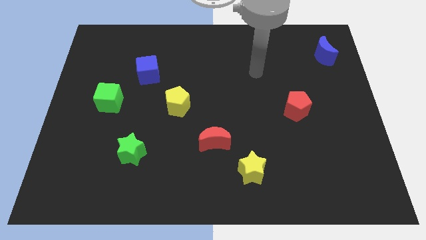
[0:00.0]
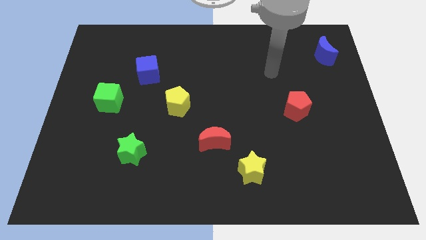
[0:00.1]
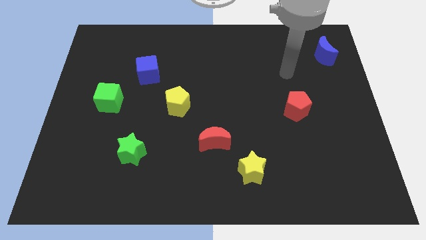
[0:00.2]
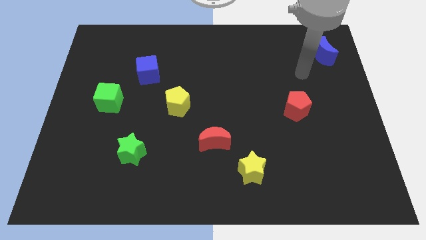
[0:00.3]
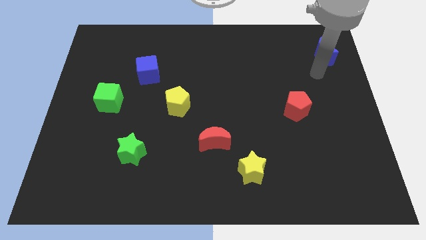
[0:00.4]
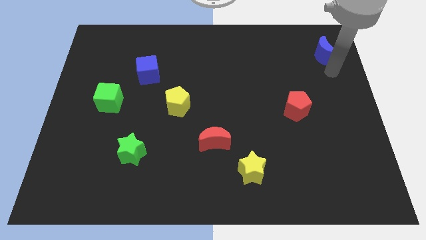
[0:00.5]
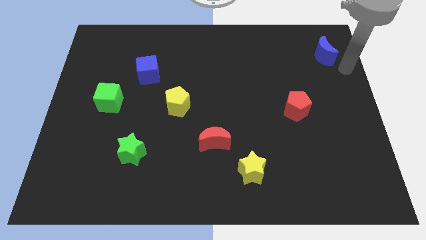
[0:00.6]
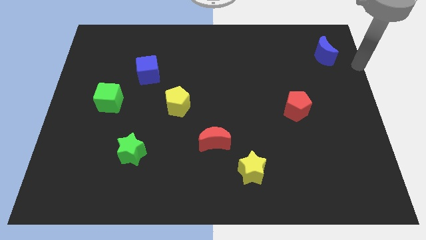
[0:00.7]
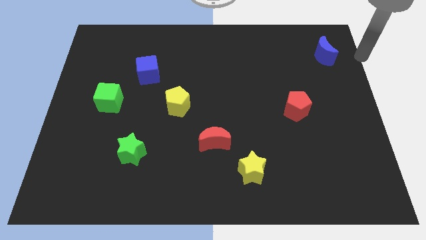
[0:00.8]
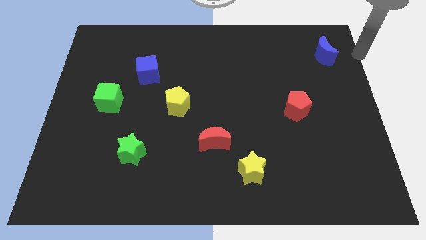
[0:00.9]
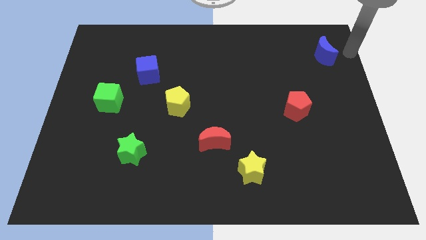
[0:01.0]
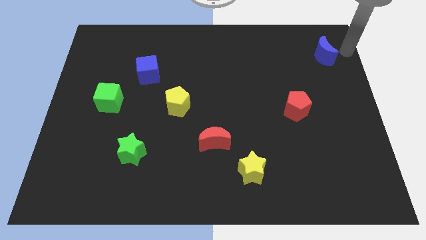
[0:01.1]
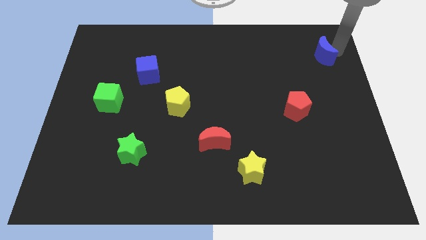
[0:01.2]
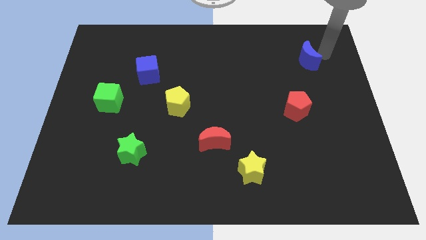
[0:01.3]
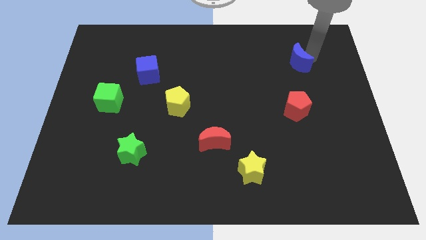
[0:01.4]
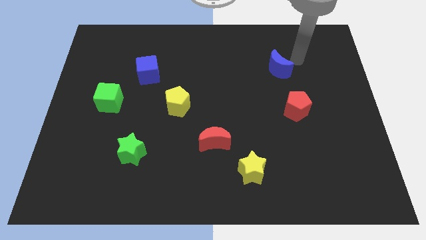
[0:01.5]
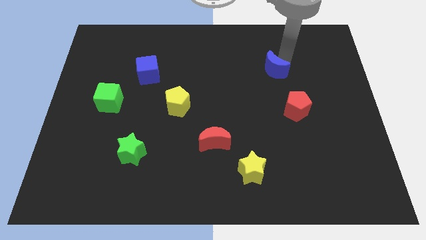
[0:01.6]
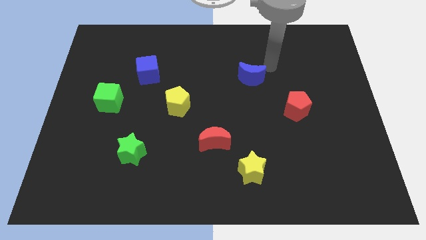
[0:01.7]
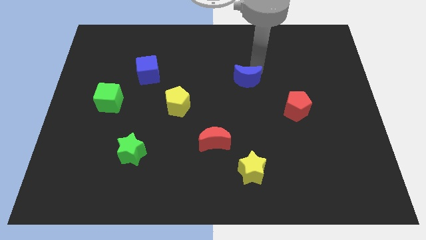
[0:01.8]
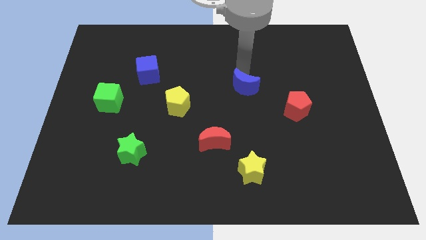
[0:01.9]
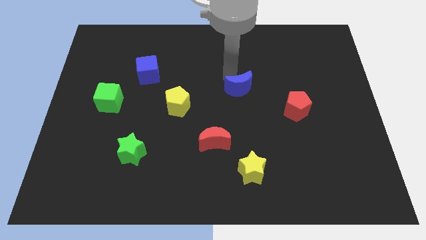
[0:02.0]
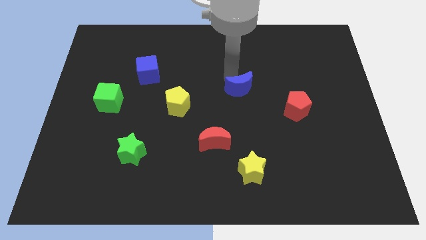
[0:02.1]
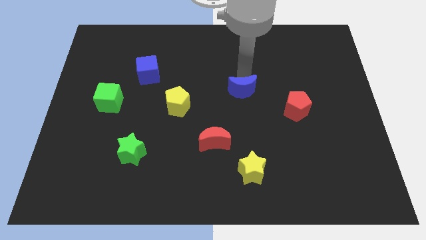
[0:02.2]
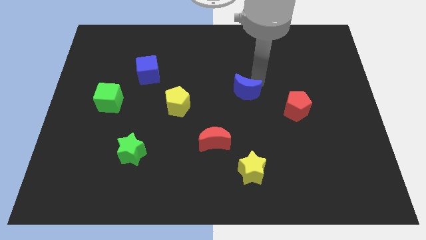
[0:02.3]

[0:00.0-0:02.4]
place the blue moon vertical to yellow star

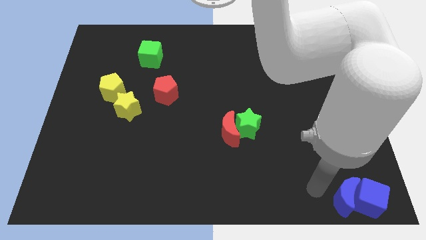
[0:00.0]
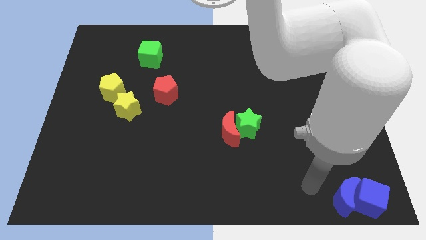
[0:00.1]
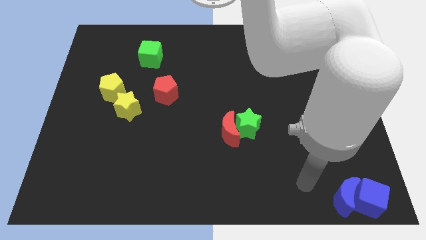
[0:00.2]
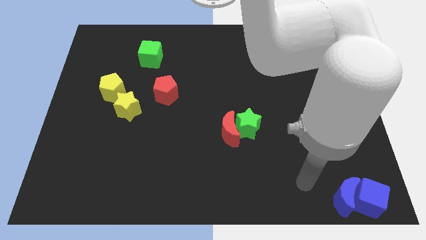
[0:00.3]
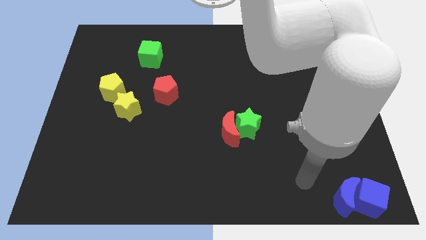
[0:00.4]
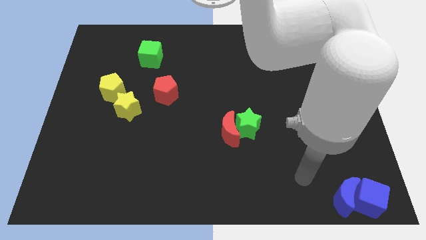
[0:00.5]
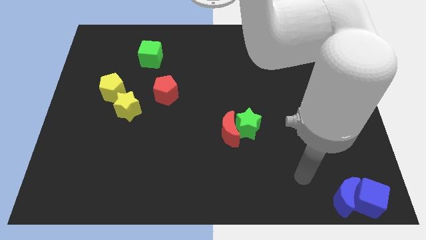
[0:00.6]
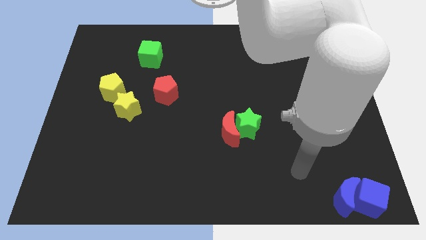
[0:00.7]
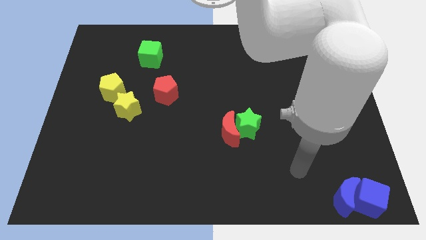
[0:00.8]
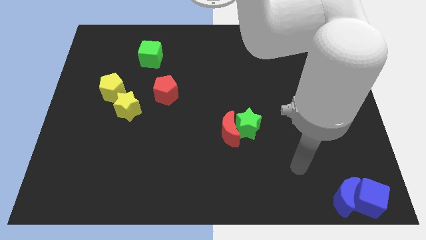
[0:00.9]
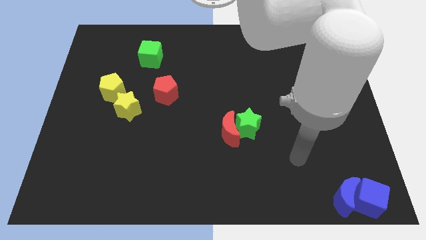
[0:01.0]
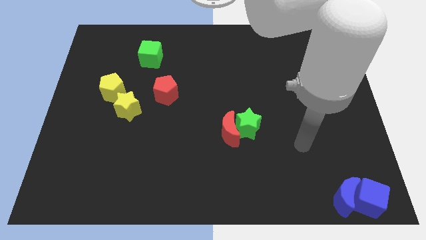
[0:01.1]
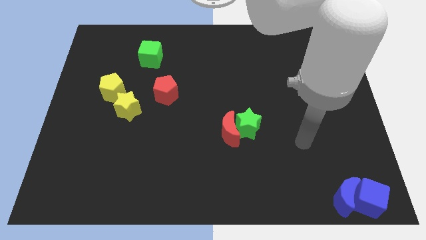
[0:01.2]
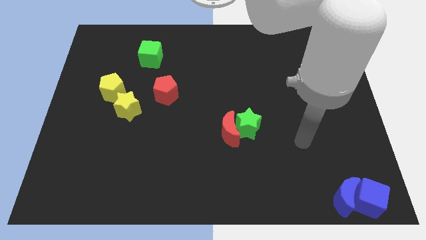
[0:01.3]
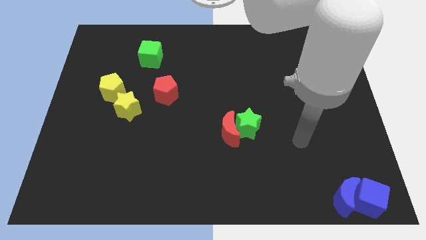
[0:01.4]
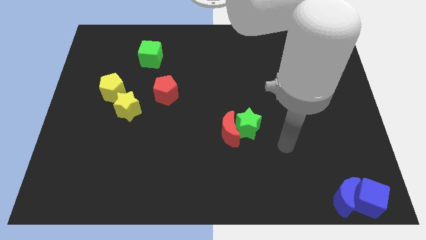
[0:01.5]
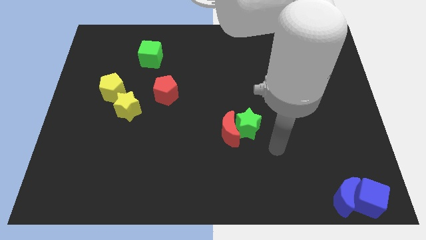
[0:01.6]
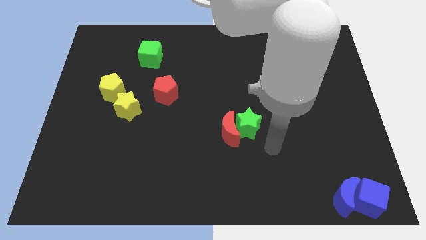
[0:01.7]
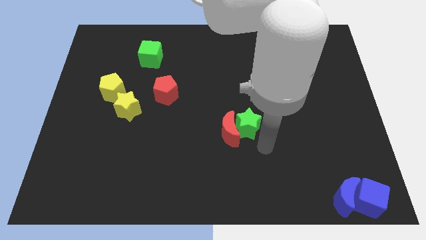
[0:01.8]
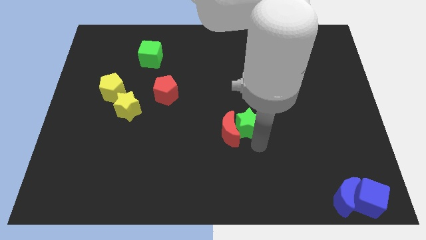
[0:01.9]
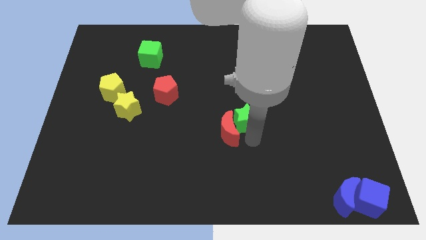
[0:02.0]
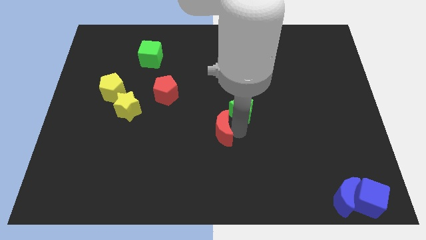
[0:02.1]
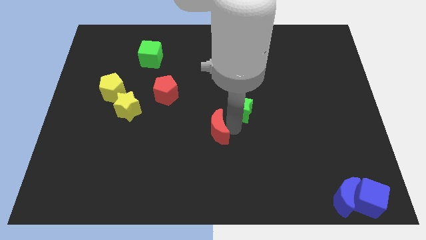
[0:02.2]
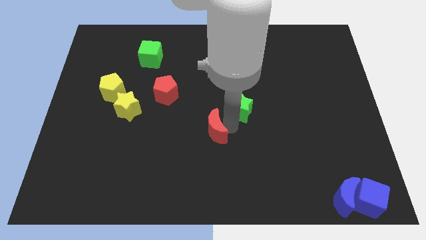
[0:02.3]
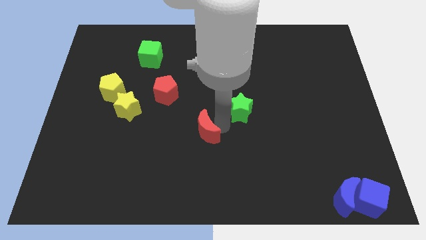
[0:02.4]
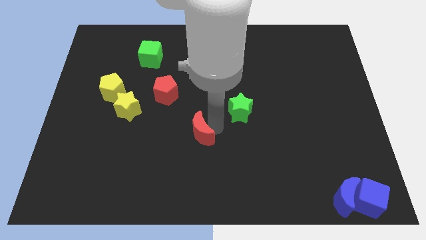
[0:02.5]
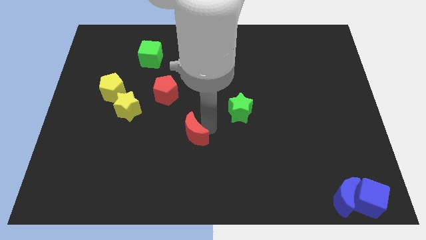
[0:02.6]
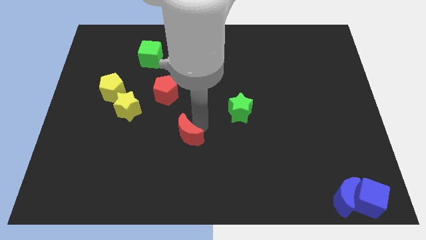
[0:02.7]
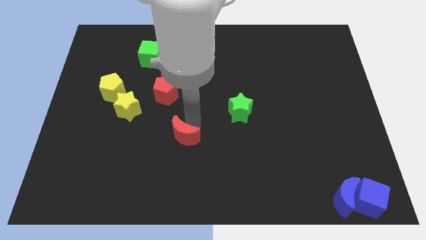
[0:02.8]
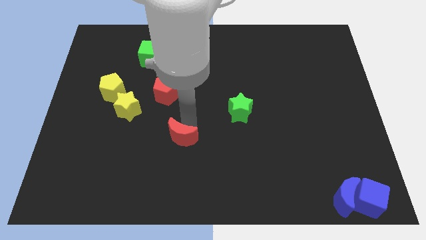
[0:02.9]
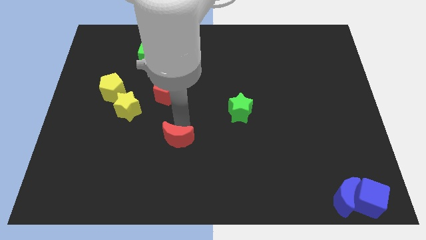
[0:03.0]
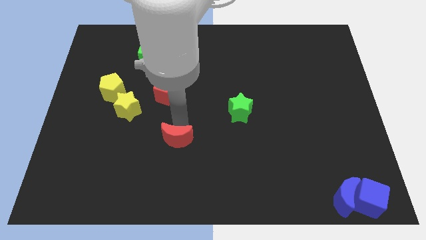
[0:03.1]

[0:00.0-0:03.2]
separate the green star and red moon

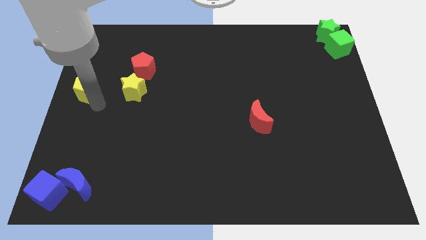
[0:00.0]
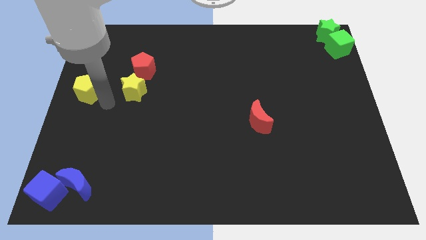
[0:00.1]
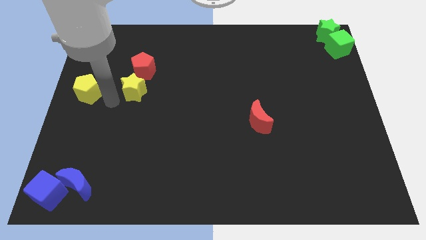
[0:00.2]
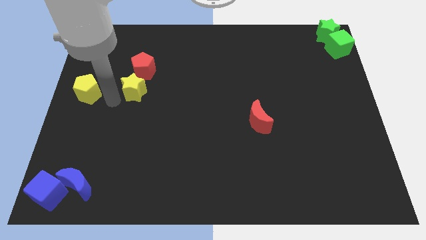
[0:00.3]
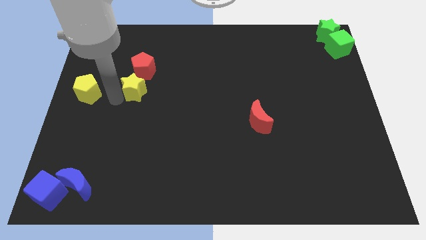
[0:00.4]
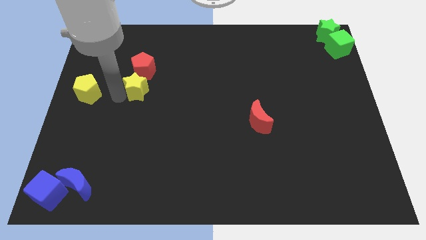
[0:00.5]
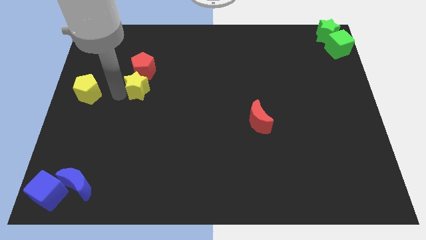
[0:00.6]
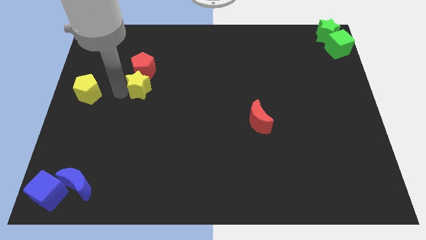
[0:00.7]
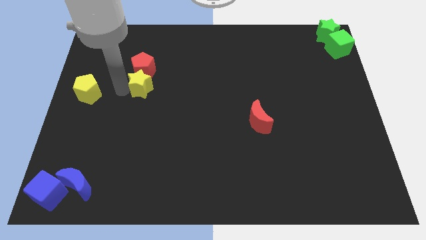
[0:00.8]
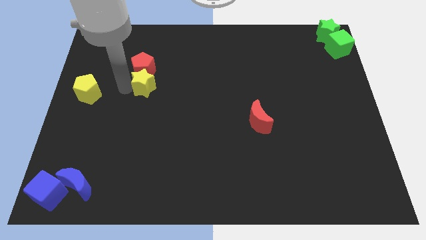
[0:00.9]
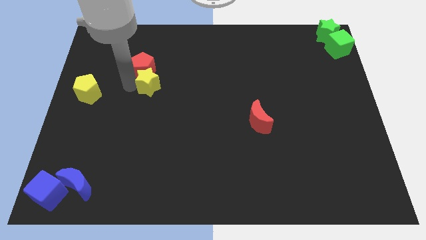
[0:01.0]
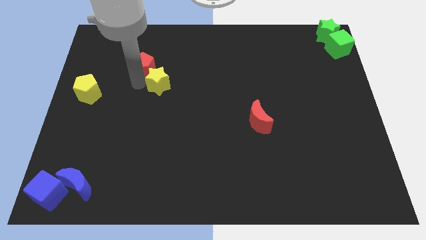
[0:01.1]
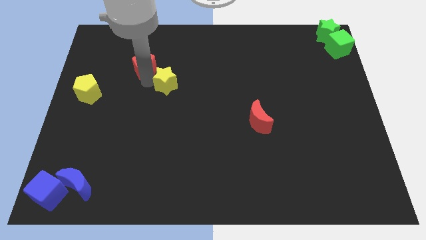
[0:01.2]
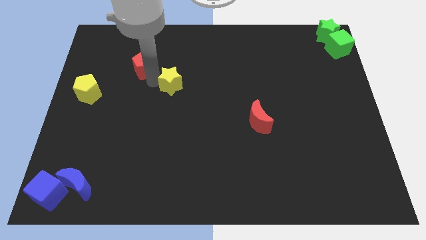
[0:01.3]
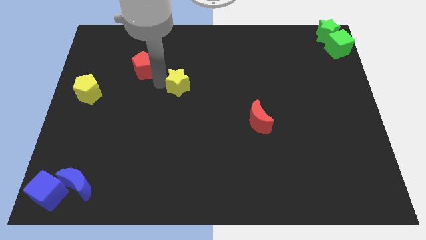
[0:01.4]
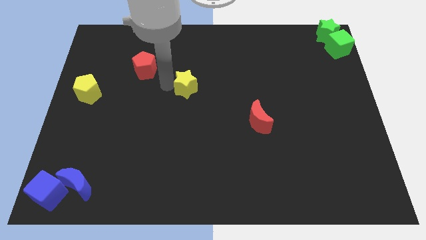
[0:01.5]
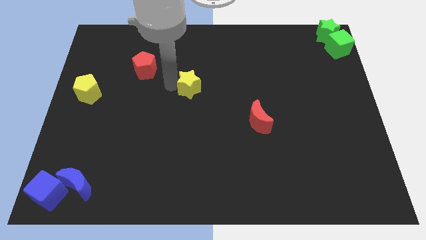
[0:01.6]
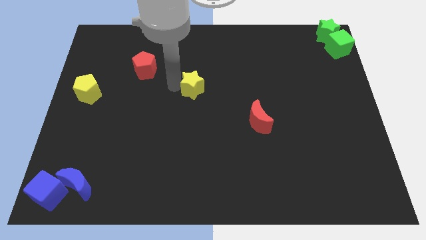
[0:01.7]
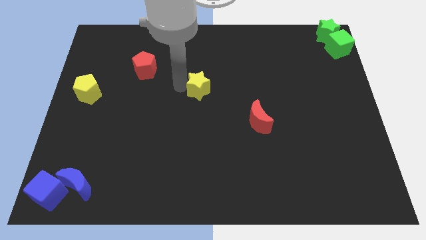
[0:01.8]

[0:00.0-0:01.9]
push the yellow star diagonally in between the red pentagon and red crescent

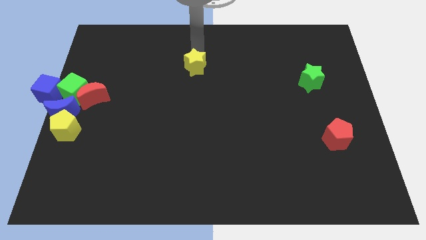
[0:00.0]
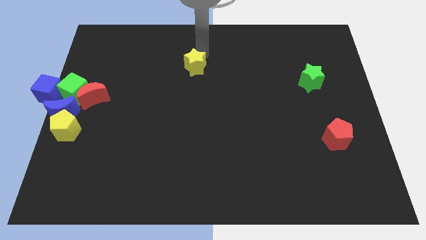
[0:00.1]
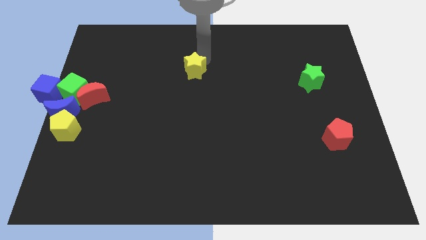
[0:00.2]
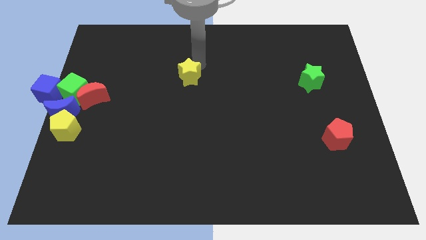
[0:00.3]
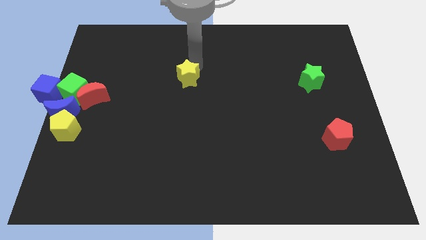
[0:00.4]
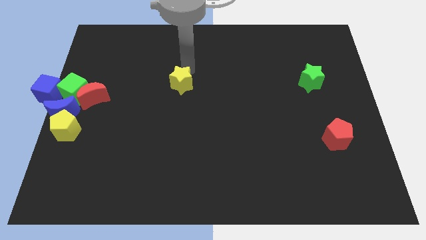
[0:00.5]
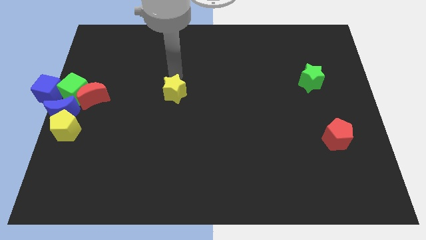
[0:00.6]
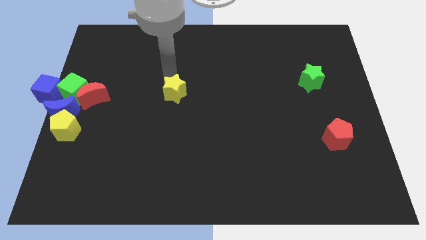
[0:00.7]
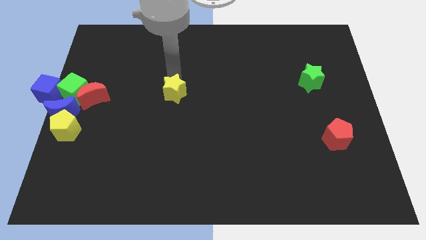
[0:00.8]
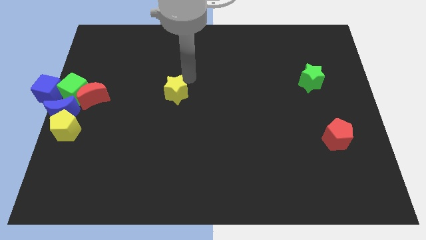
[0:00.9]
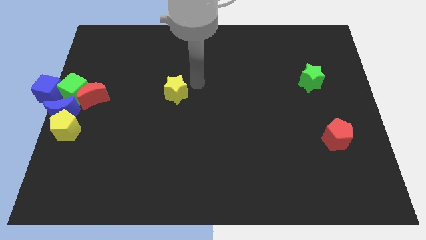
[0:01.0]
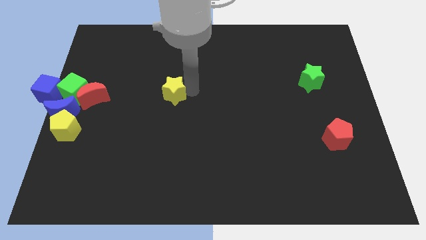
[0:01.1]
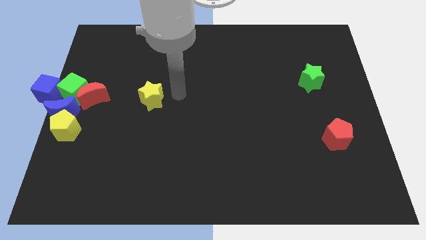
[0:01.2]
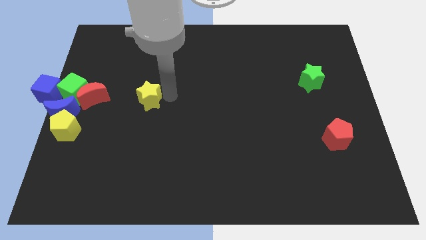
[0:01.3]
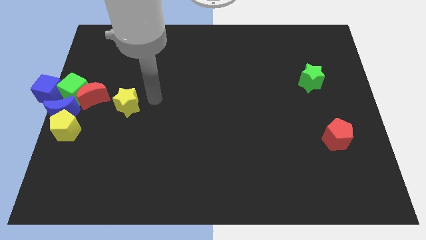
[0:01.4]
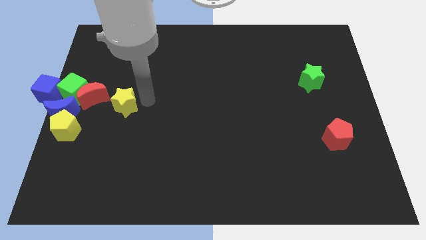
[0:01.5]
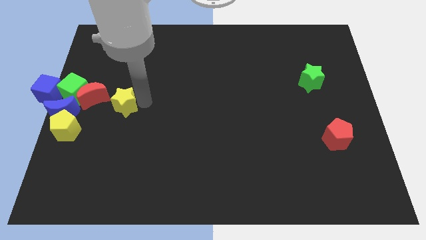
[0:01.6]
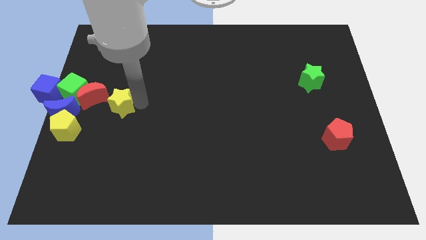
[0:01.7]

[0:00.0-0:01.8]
push the yellow star towards the group of objects
